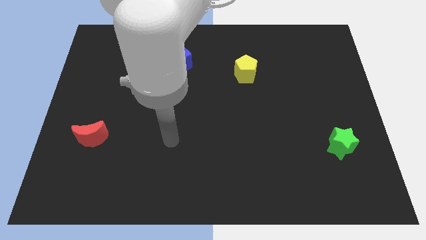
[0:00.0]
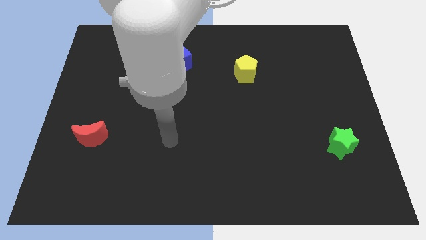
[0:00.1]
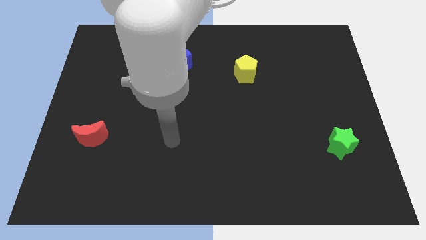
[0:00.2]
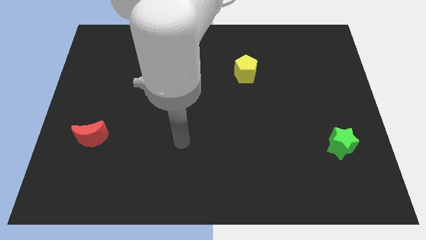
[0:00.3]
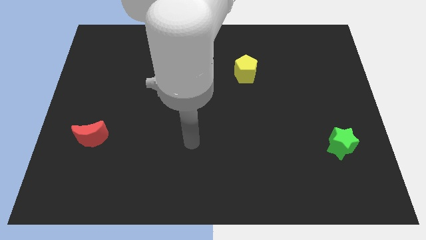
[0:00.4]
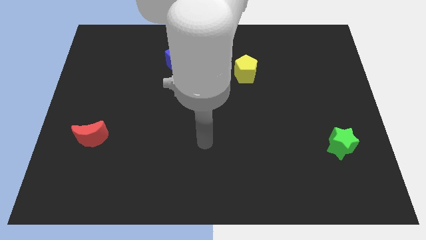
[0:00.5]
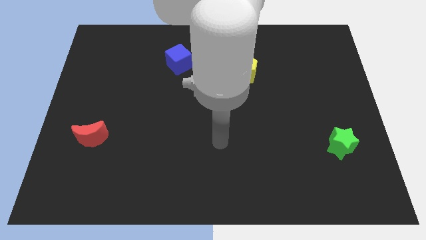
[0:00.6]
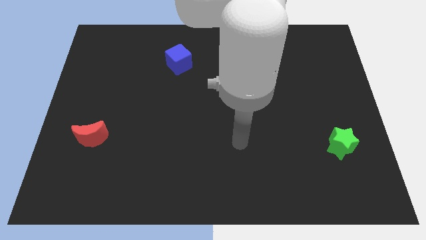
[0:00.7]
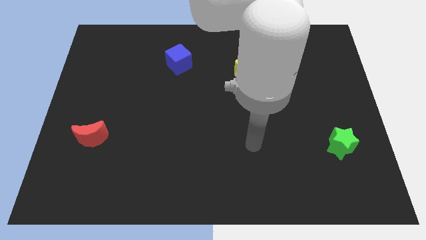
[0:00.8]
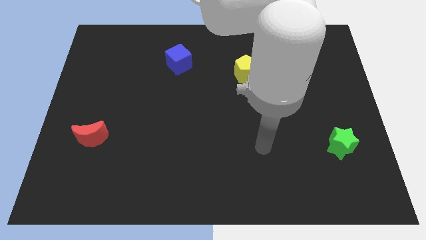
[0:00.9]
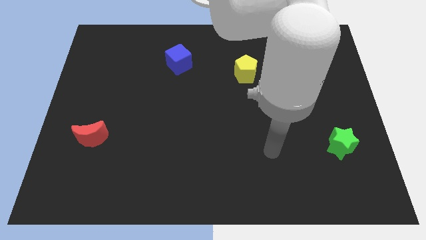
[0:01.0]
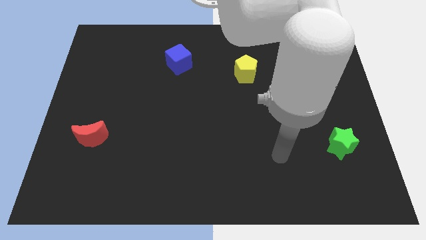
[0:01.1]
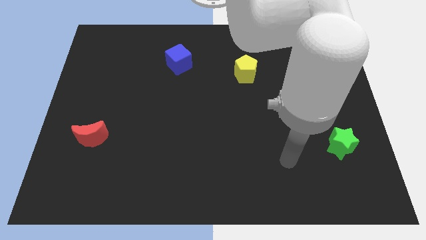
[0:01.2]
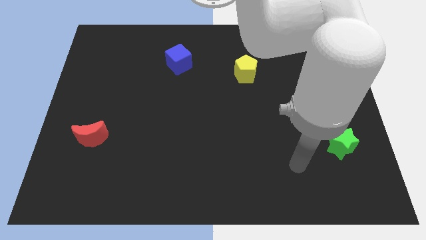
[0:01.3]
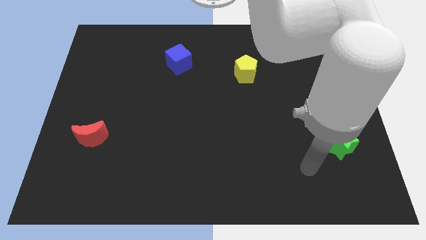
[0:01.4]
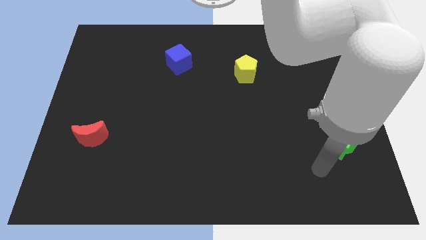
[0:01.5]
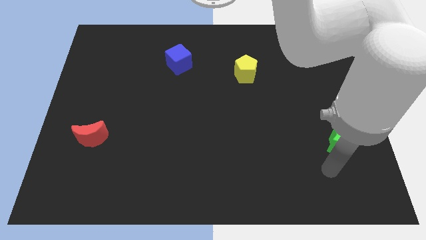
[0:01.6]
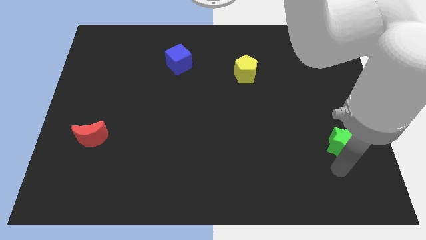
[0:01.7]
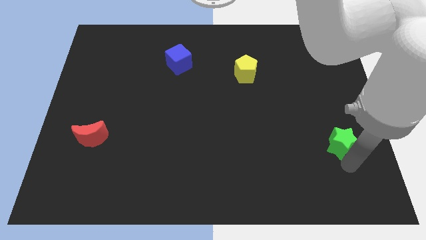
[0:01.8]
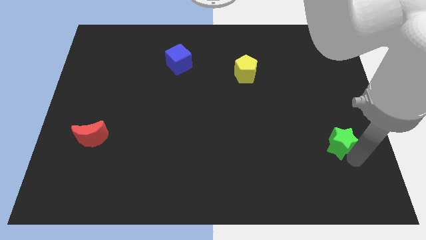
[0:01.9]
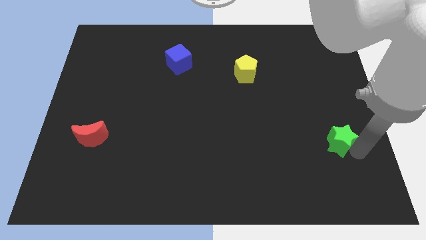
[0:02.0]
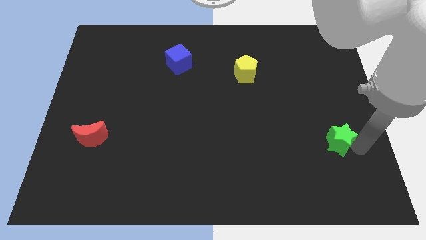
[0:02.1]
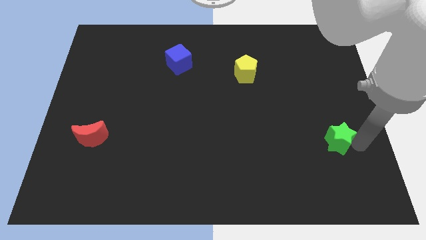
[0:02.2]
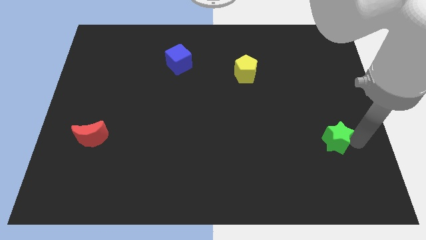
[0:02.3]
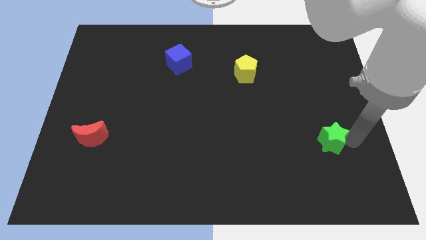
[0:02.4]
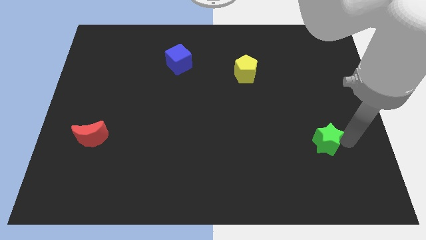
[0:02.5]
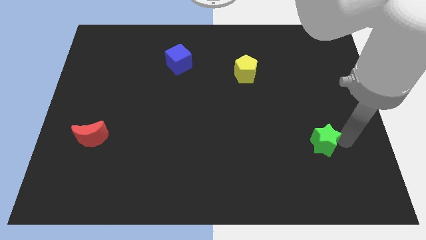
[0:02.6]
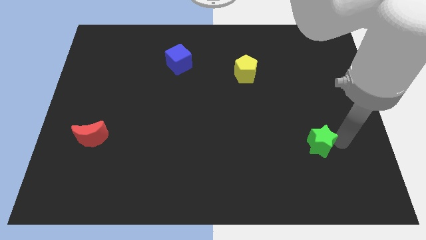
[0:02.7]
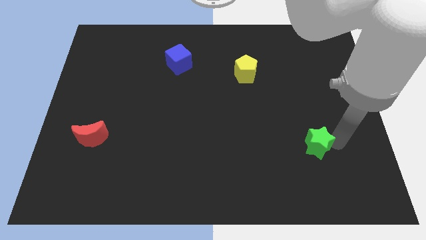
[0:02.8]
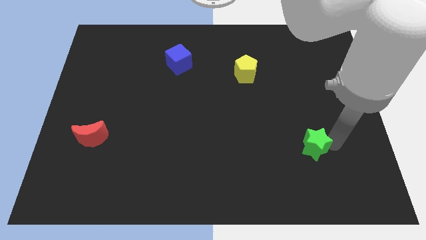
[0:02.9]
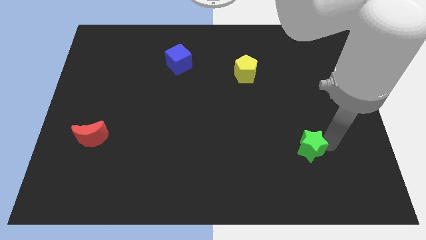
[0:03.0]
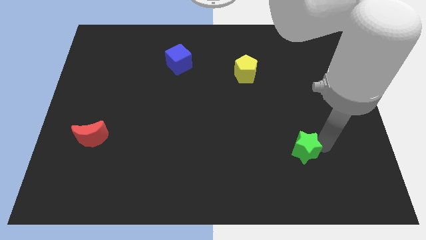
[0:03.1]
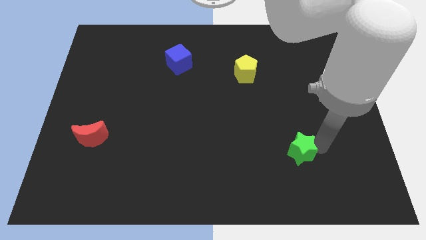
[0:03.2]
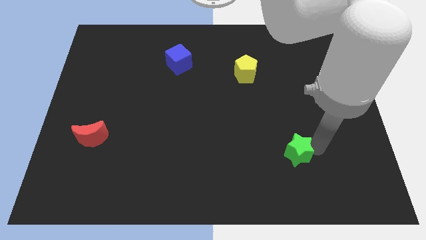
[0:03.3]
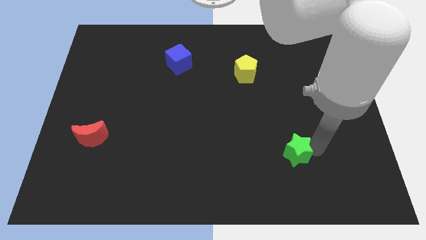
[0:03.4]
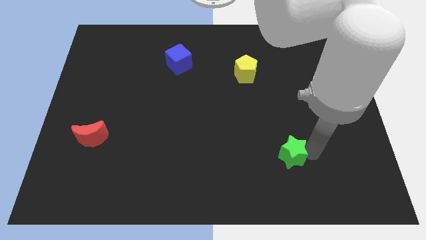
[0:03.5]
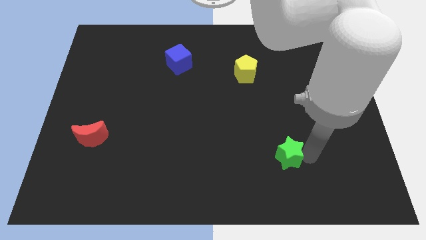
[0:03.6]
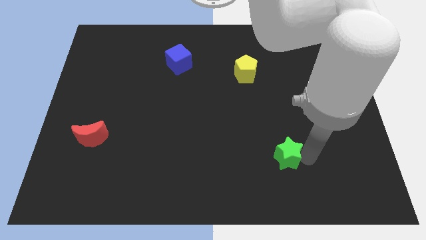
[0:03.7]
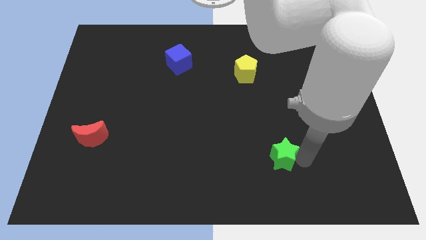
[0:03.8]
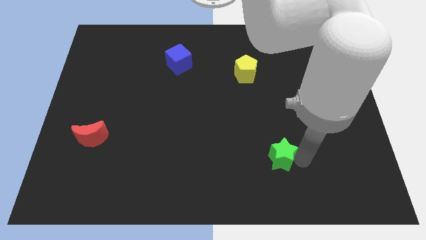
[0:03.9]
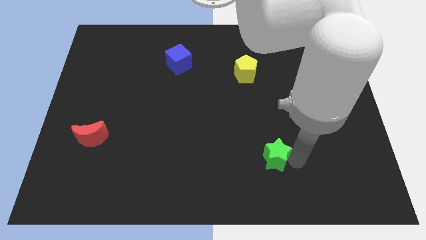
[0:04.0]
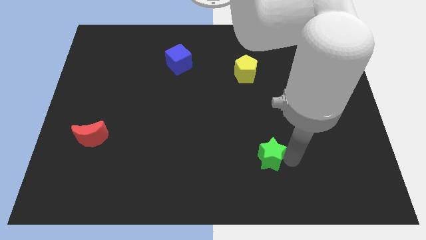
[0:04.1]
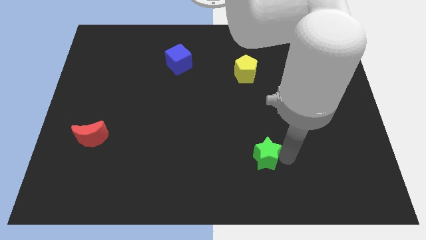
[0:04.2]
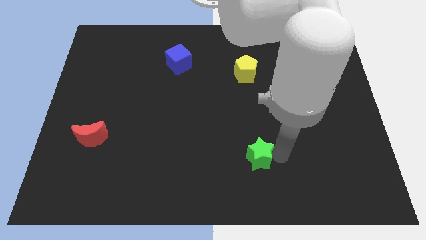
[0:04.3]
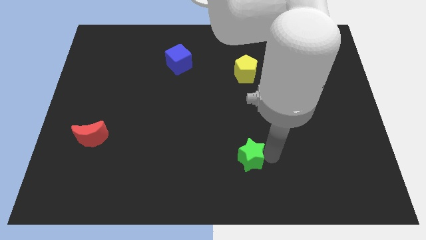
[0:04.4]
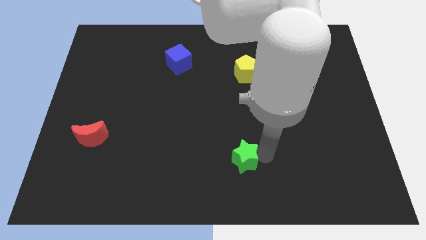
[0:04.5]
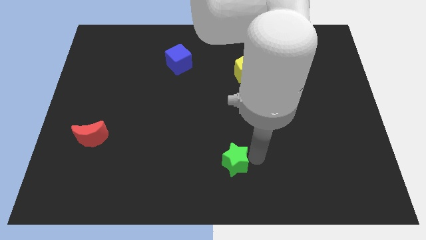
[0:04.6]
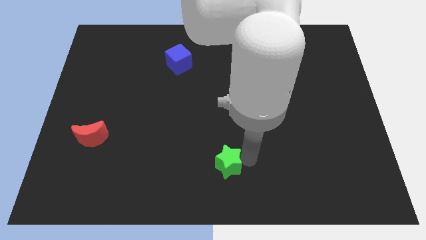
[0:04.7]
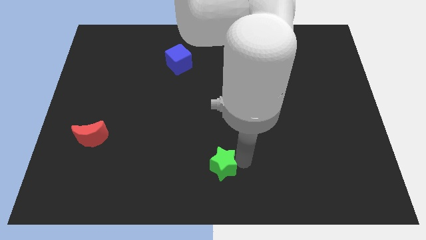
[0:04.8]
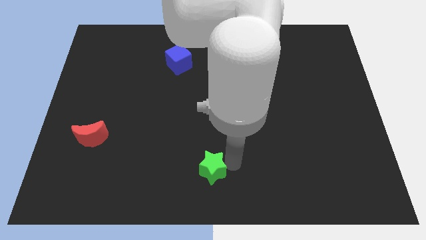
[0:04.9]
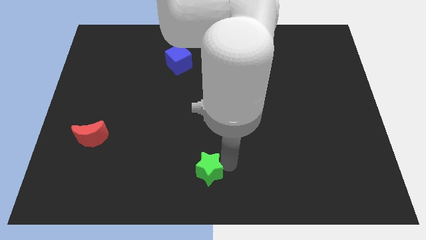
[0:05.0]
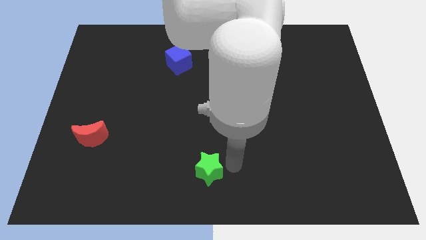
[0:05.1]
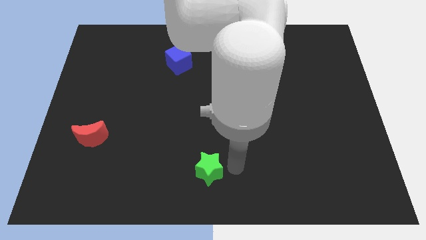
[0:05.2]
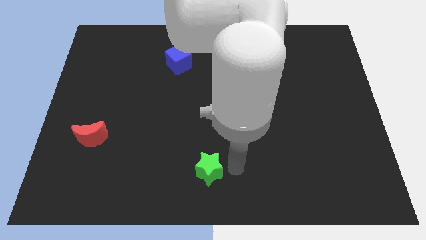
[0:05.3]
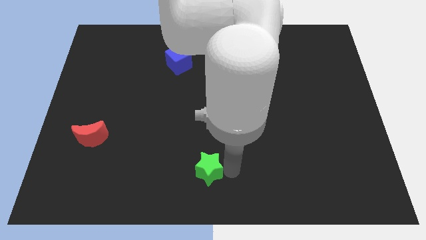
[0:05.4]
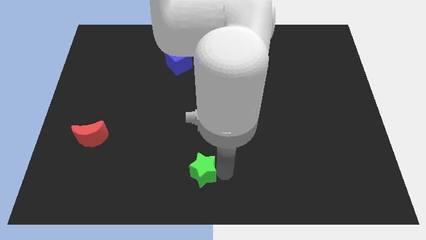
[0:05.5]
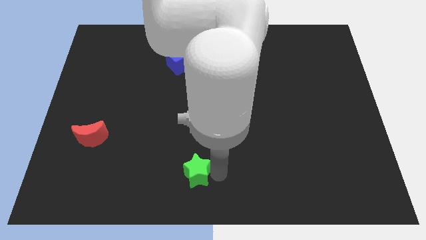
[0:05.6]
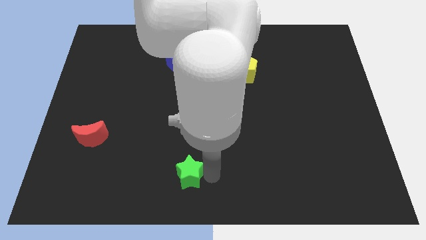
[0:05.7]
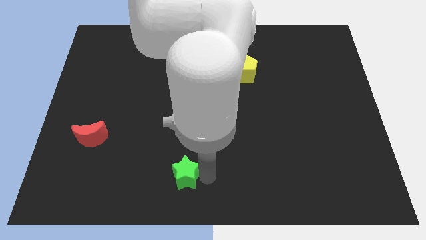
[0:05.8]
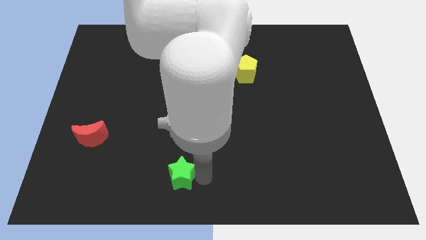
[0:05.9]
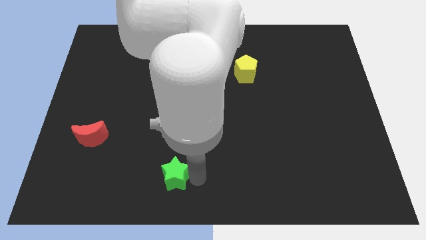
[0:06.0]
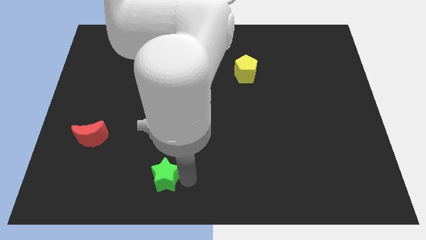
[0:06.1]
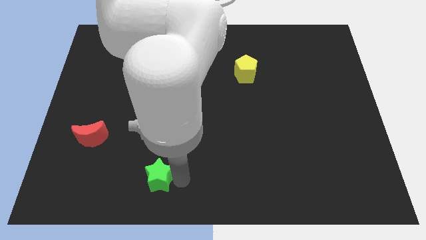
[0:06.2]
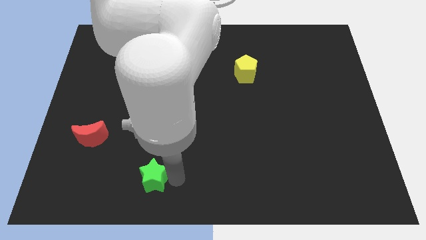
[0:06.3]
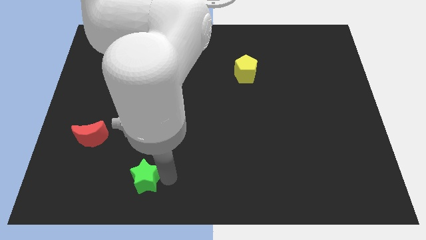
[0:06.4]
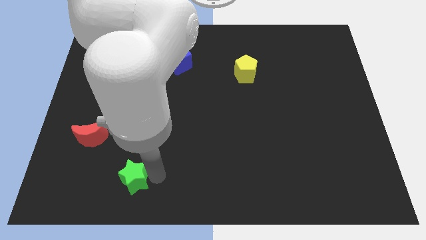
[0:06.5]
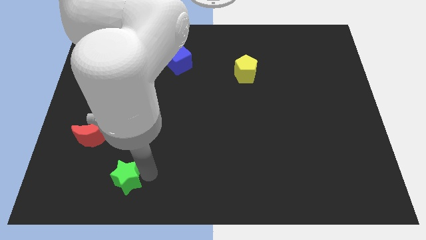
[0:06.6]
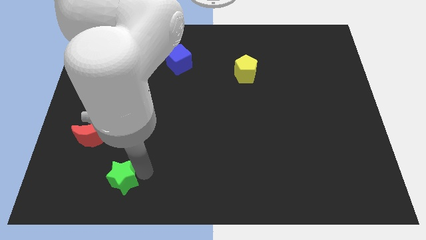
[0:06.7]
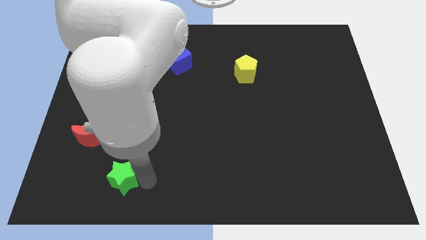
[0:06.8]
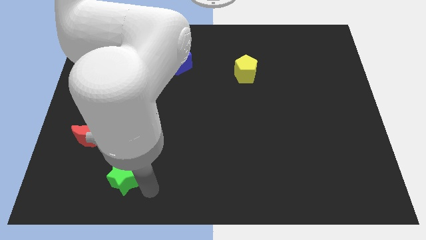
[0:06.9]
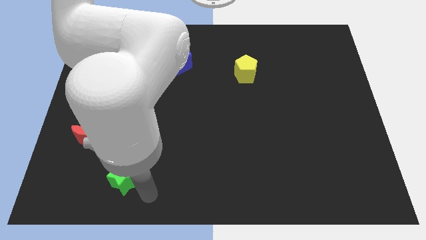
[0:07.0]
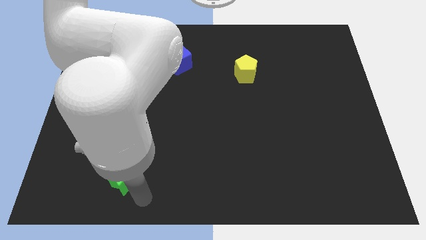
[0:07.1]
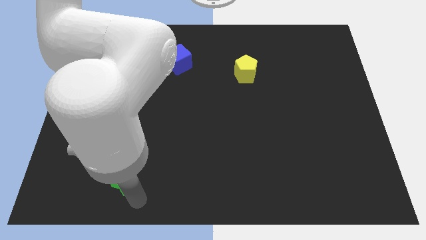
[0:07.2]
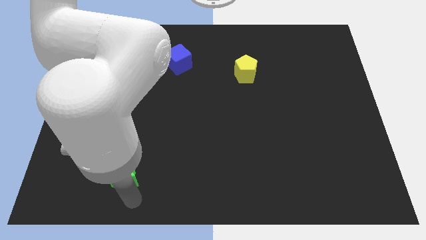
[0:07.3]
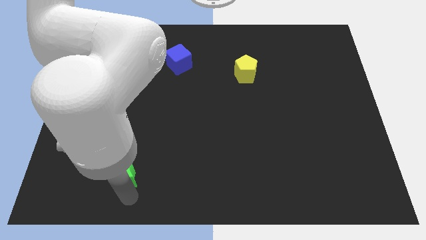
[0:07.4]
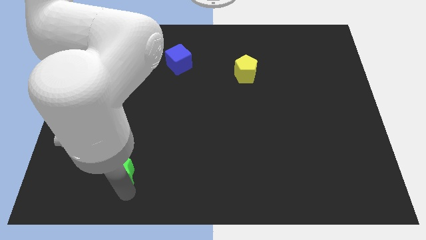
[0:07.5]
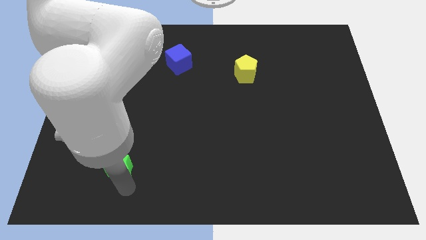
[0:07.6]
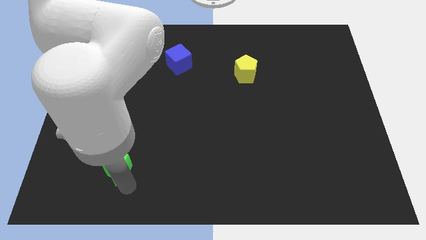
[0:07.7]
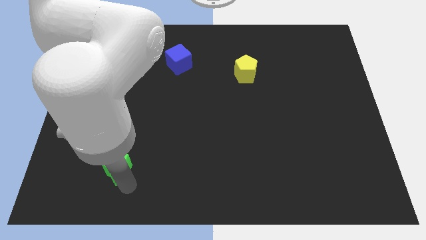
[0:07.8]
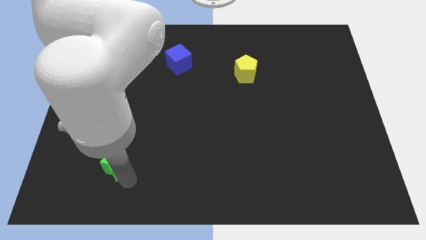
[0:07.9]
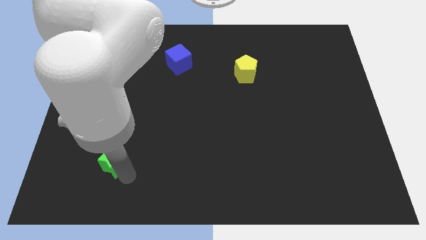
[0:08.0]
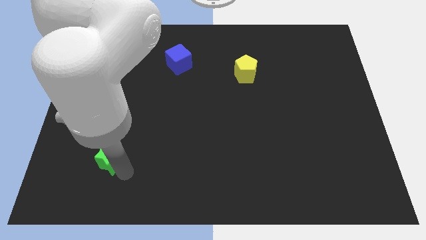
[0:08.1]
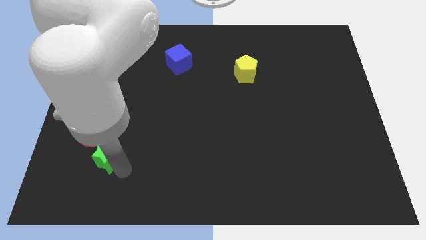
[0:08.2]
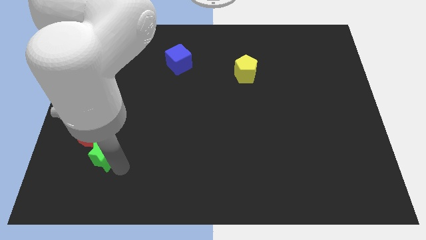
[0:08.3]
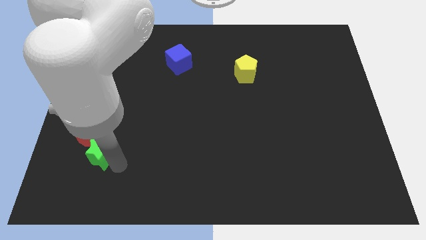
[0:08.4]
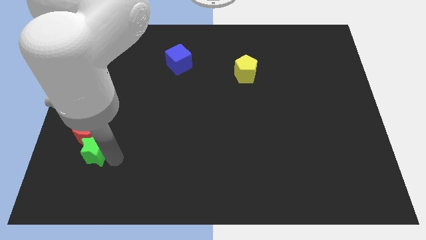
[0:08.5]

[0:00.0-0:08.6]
slide the star to the red block
